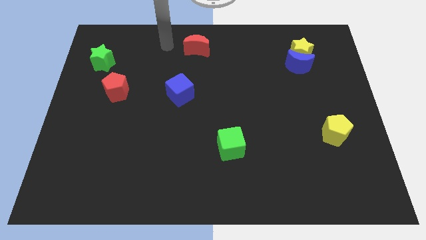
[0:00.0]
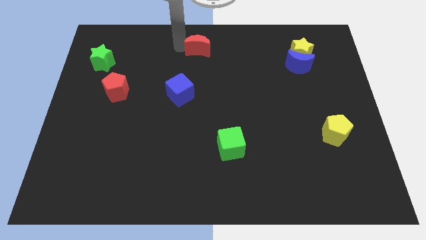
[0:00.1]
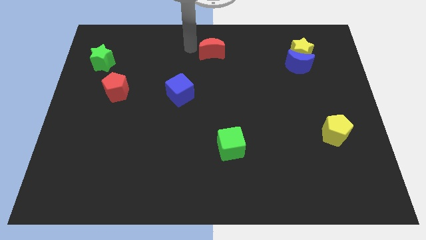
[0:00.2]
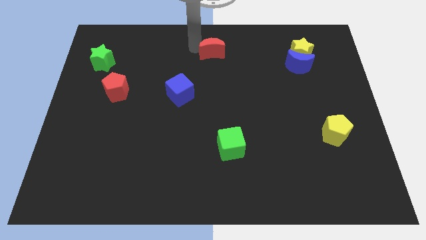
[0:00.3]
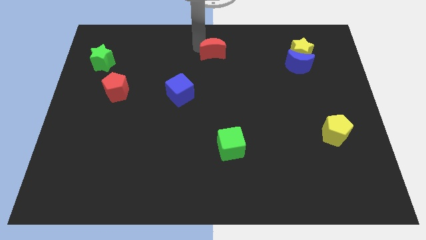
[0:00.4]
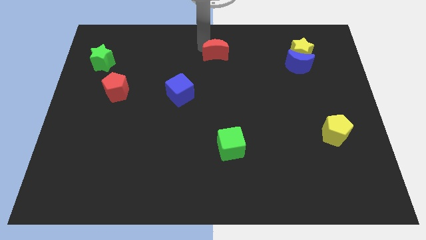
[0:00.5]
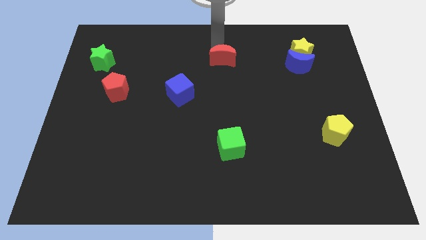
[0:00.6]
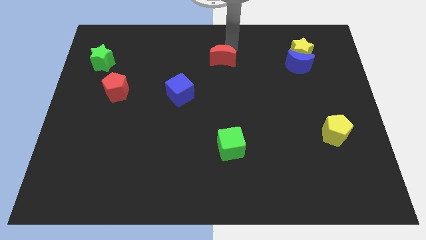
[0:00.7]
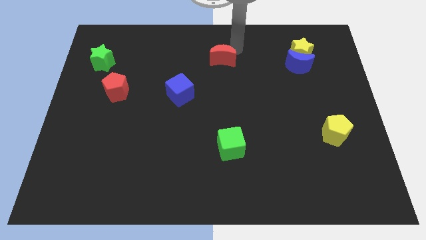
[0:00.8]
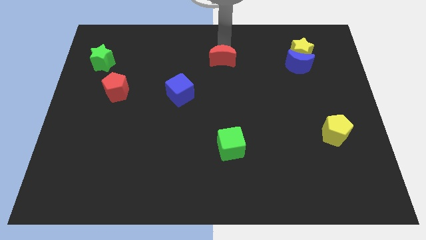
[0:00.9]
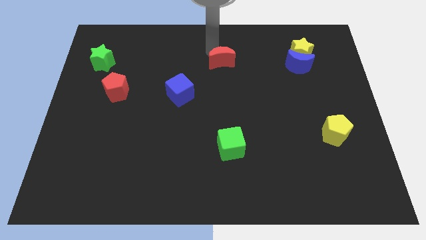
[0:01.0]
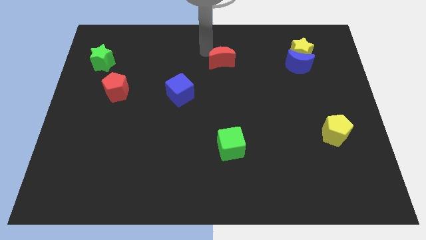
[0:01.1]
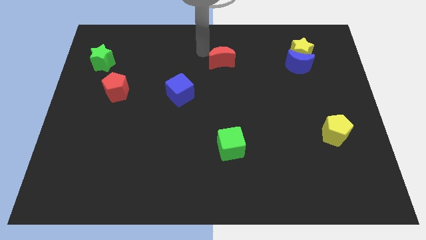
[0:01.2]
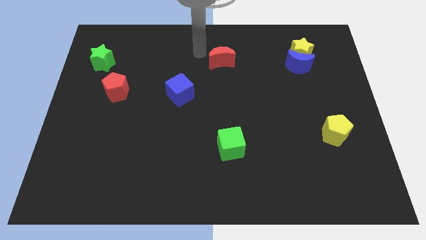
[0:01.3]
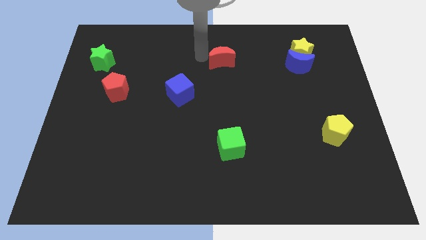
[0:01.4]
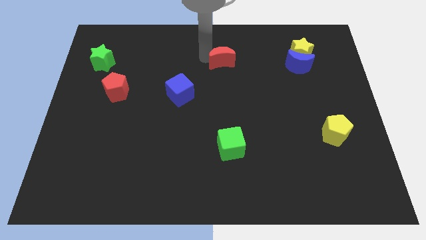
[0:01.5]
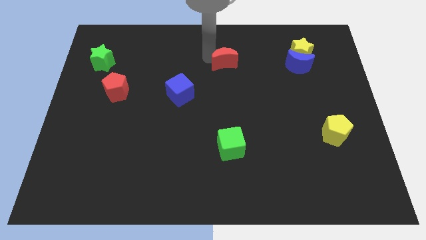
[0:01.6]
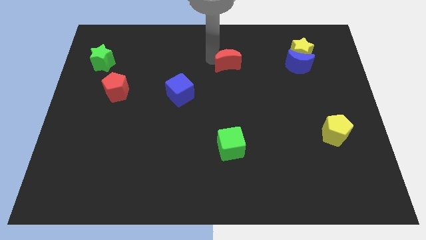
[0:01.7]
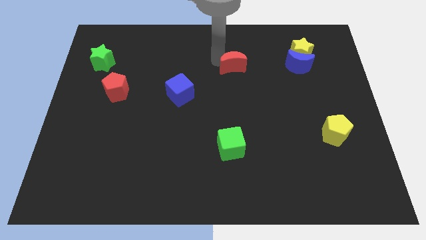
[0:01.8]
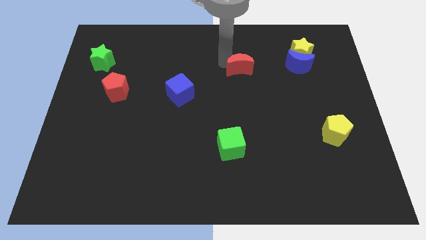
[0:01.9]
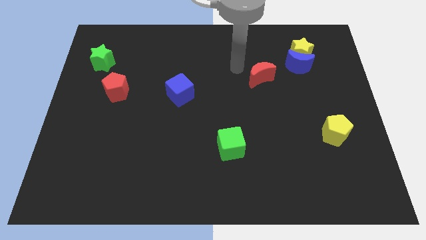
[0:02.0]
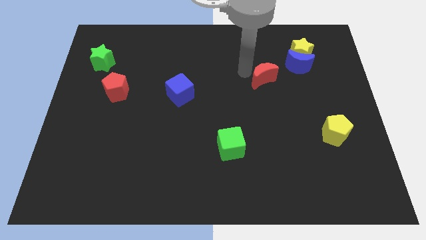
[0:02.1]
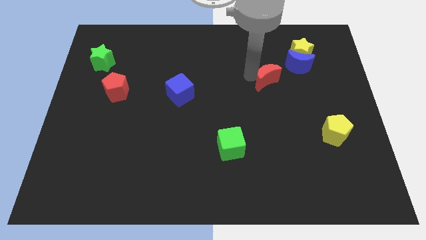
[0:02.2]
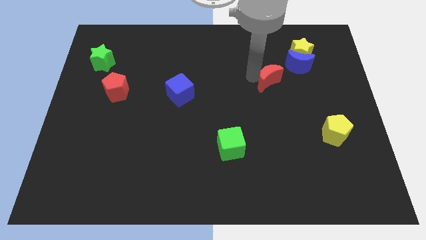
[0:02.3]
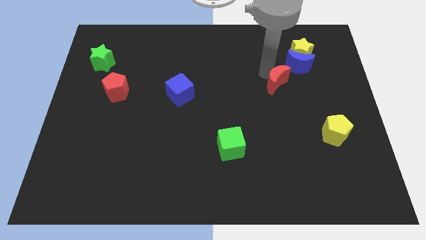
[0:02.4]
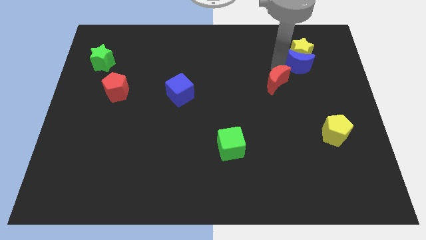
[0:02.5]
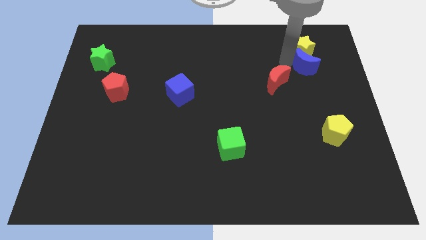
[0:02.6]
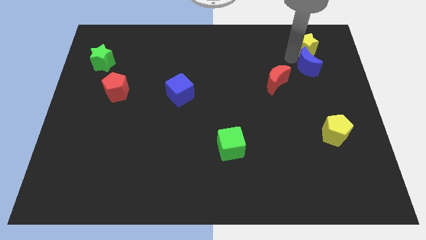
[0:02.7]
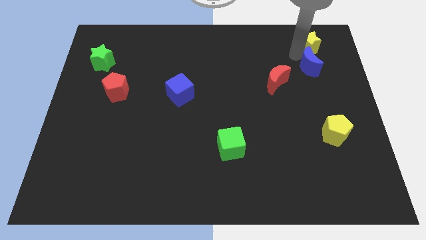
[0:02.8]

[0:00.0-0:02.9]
move the red moon diagonally below the blue moon

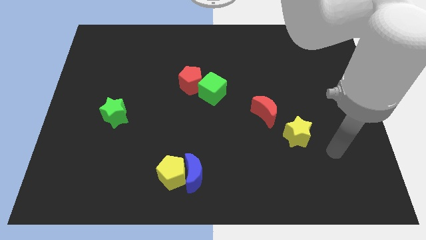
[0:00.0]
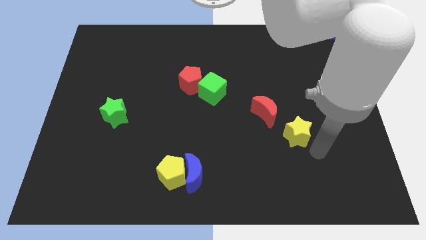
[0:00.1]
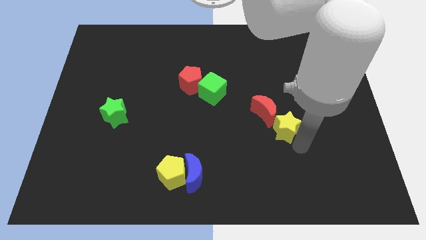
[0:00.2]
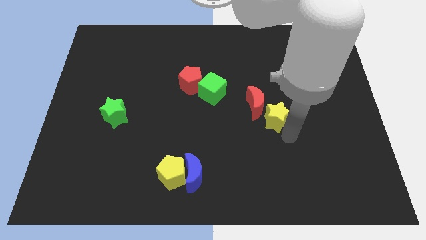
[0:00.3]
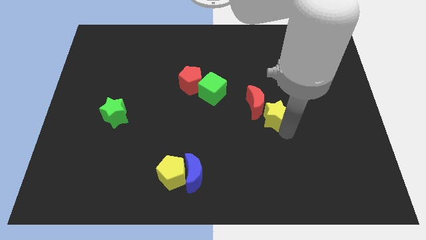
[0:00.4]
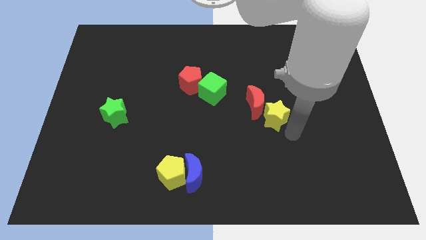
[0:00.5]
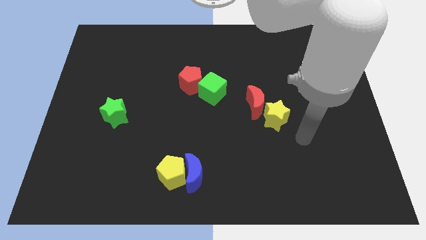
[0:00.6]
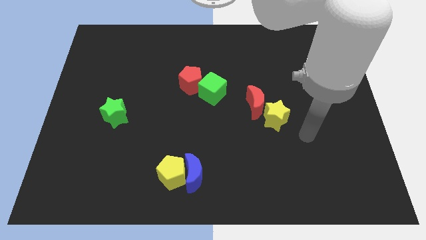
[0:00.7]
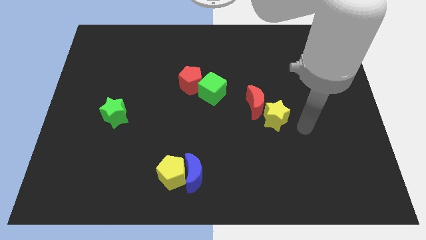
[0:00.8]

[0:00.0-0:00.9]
push the yellow star and red moon towards the center of the board

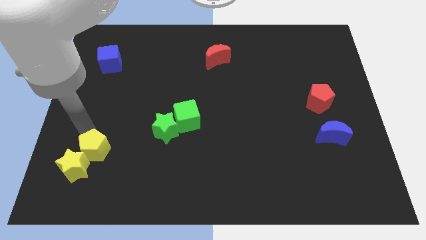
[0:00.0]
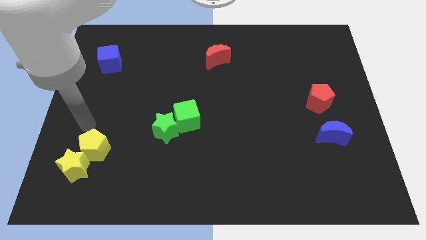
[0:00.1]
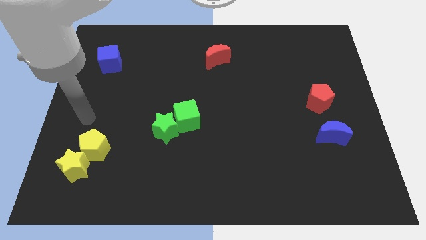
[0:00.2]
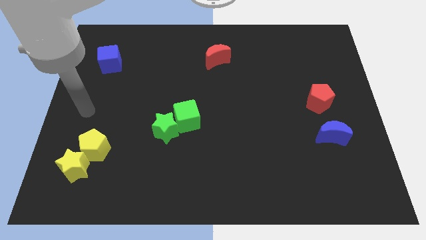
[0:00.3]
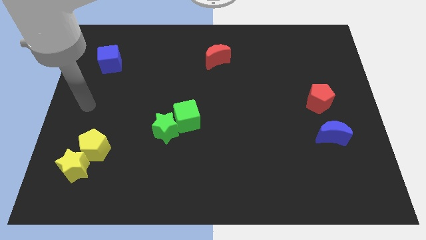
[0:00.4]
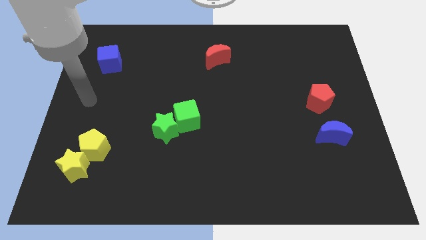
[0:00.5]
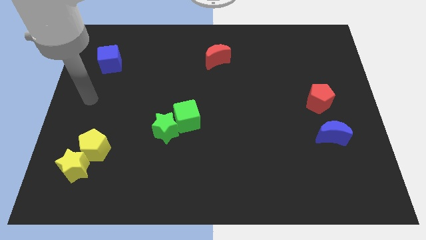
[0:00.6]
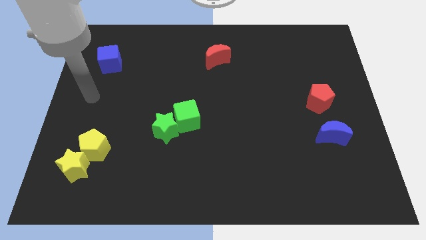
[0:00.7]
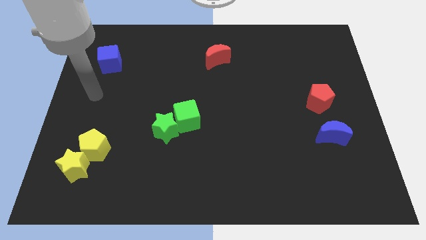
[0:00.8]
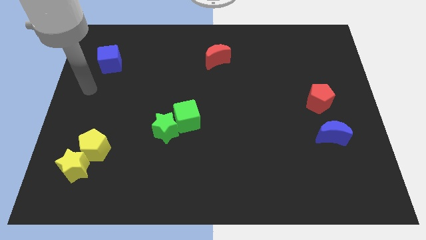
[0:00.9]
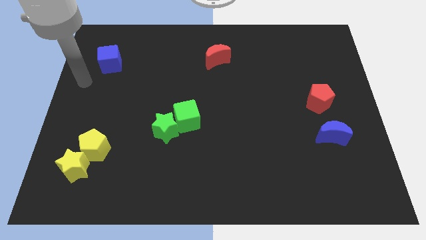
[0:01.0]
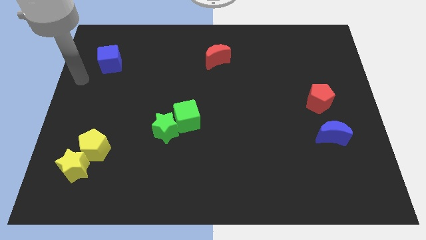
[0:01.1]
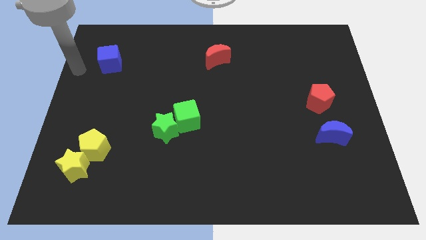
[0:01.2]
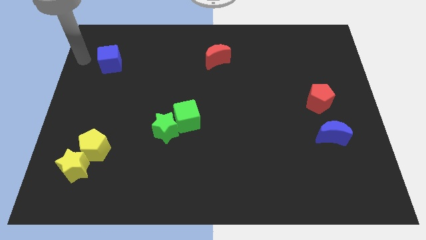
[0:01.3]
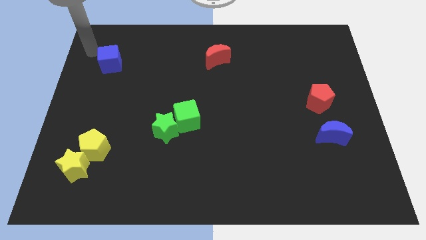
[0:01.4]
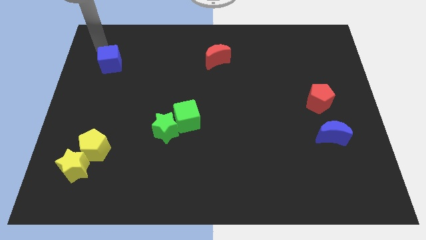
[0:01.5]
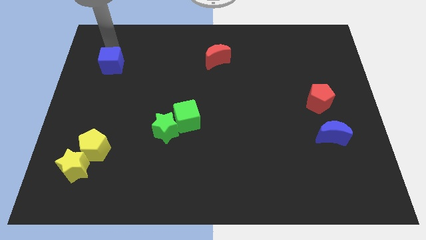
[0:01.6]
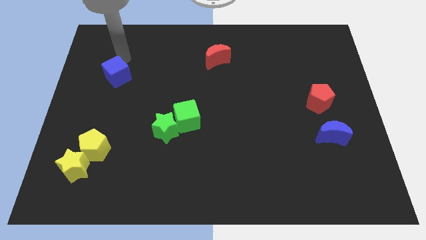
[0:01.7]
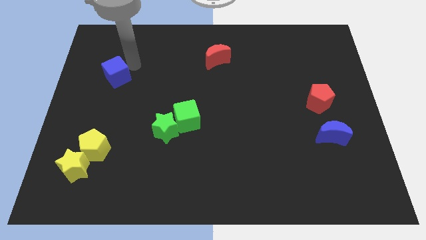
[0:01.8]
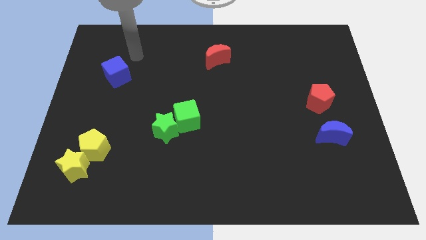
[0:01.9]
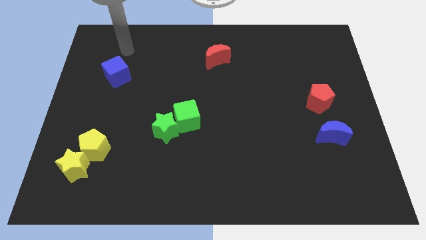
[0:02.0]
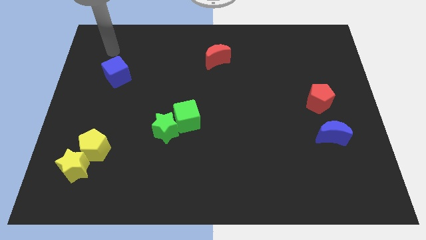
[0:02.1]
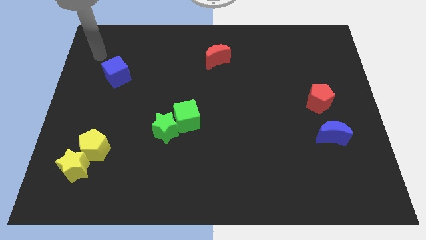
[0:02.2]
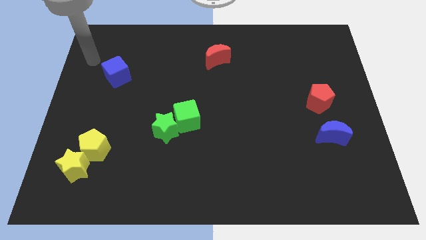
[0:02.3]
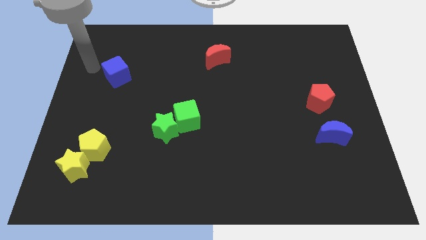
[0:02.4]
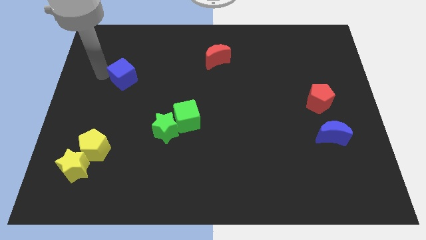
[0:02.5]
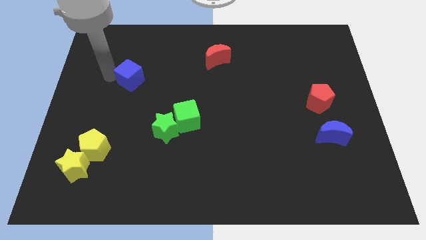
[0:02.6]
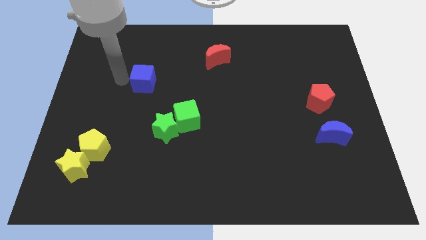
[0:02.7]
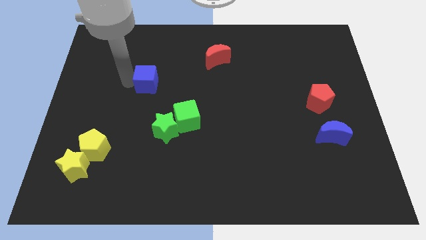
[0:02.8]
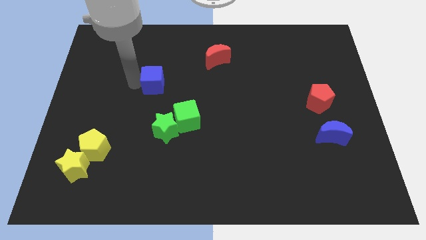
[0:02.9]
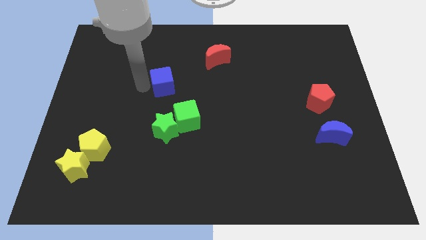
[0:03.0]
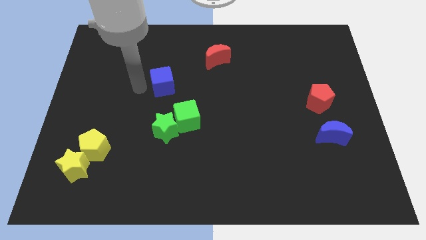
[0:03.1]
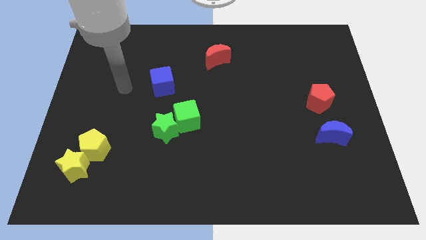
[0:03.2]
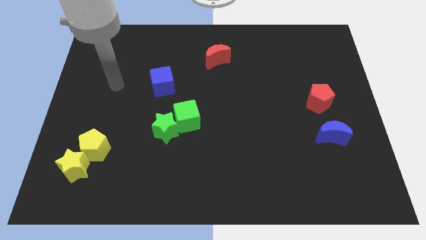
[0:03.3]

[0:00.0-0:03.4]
move your arm away from the yellow pentagon

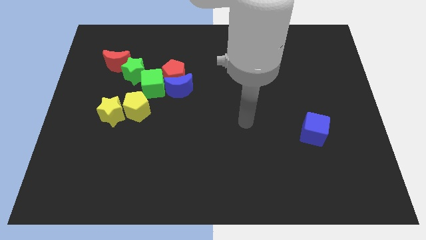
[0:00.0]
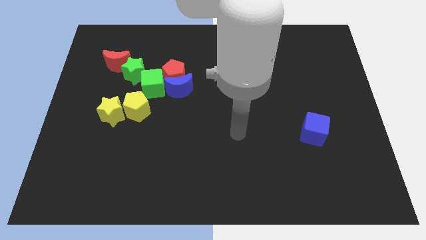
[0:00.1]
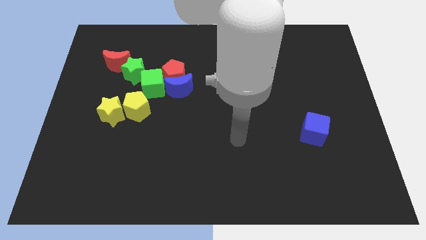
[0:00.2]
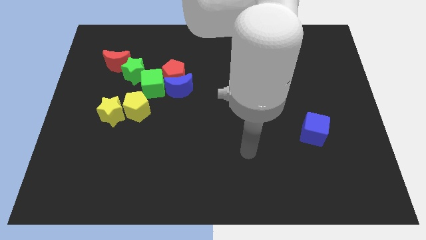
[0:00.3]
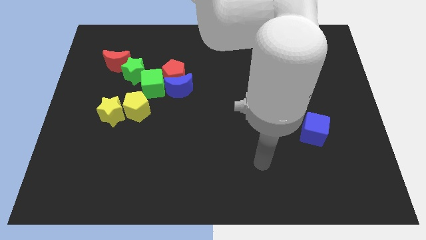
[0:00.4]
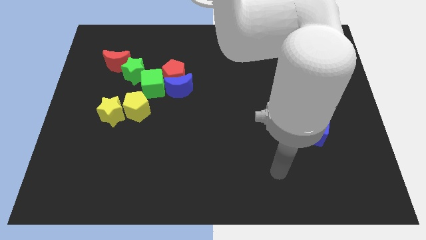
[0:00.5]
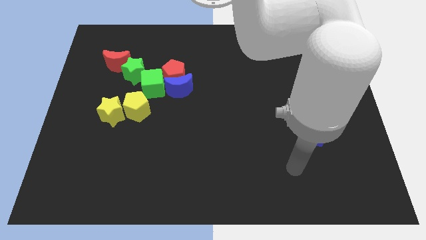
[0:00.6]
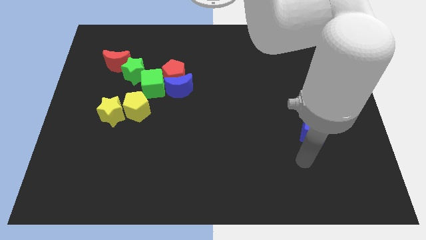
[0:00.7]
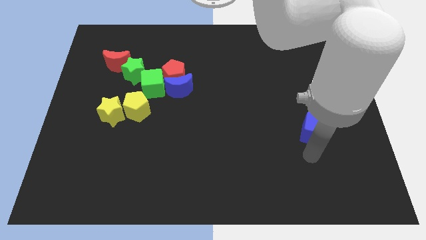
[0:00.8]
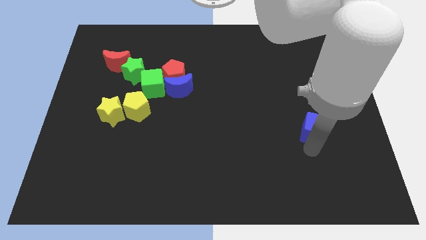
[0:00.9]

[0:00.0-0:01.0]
move your hand to the bottom of the blue cube

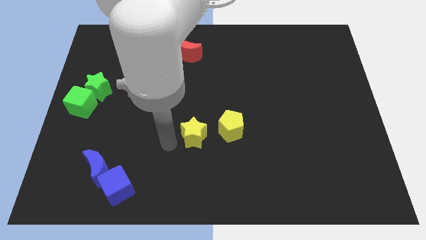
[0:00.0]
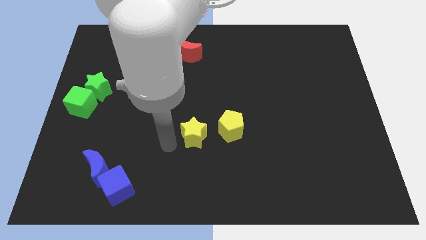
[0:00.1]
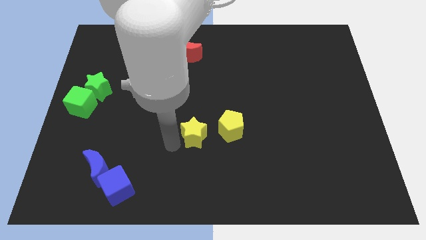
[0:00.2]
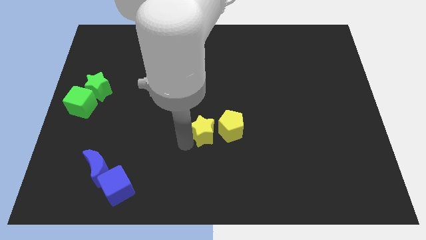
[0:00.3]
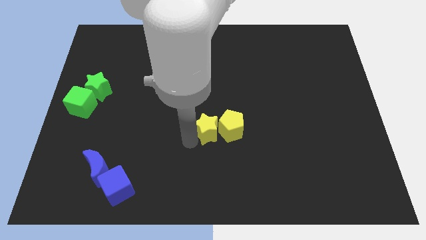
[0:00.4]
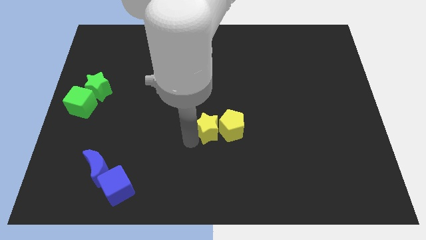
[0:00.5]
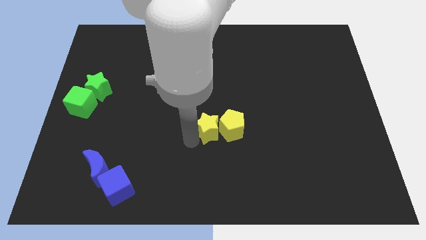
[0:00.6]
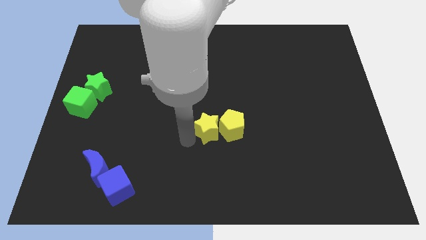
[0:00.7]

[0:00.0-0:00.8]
push the yellow star into the yellow pentagon
